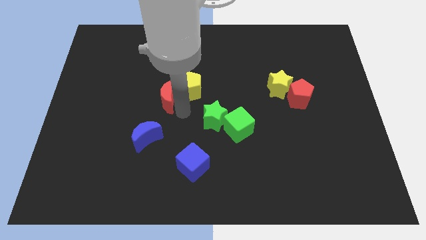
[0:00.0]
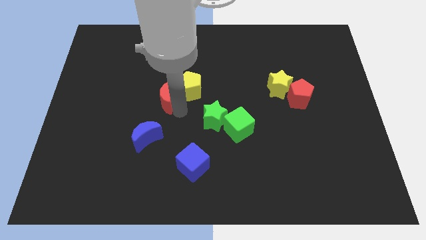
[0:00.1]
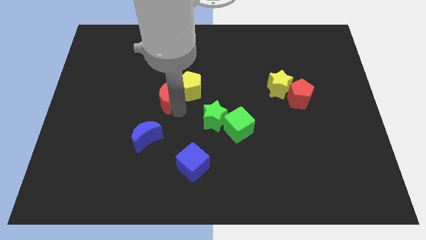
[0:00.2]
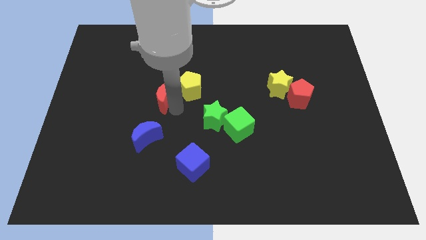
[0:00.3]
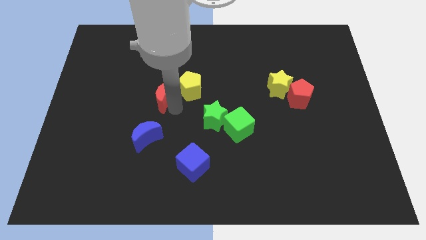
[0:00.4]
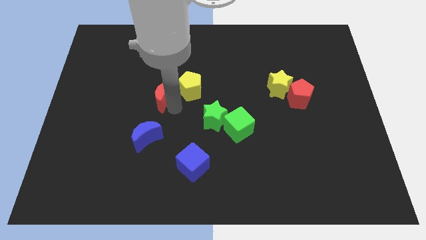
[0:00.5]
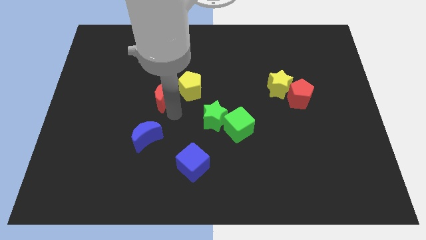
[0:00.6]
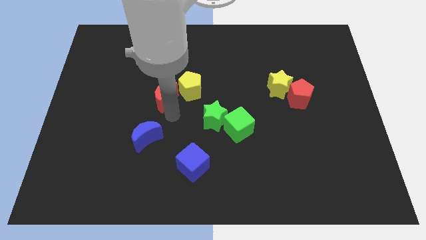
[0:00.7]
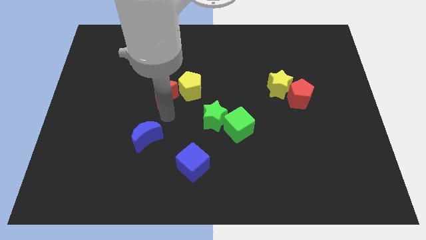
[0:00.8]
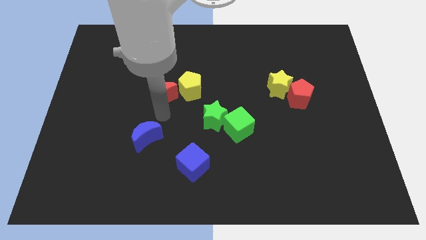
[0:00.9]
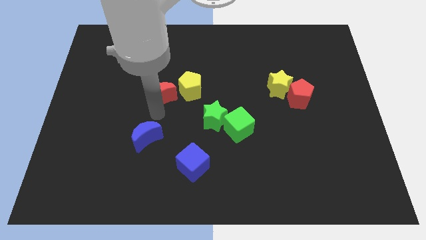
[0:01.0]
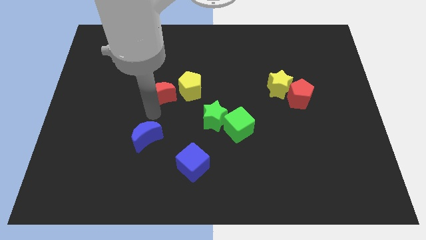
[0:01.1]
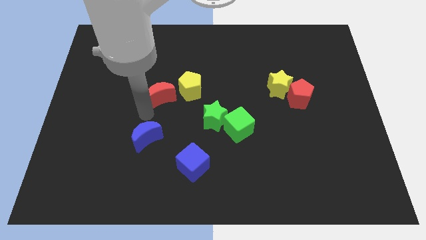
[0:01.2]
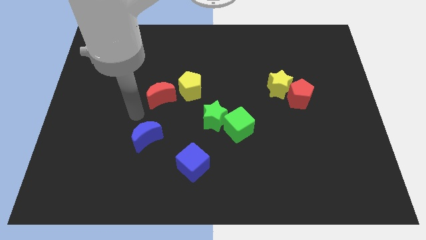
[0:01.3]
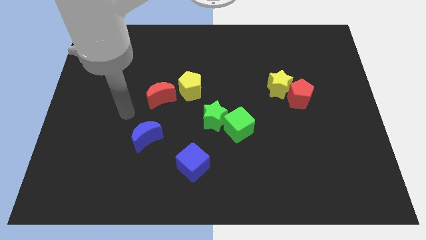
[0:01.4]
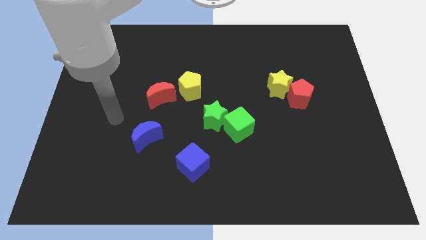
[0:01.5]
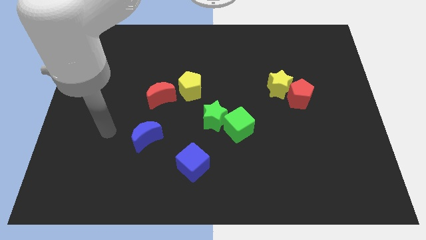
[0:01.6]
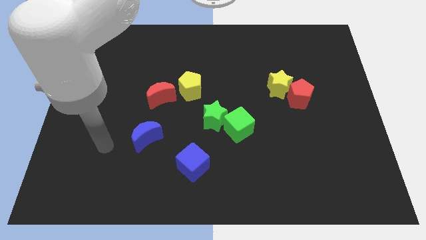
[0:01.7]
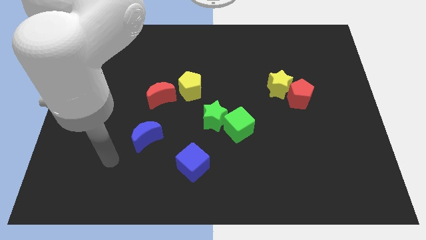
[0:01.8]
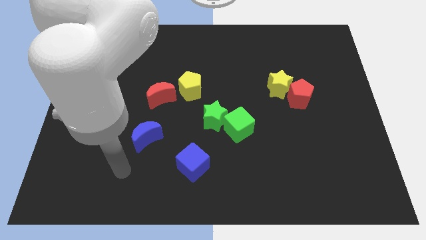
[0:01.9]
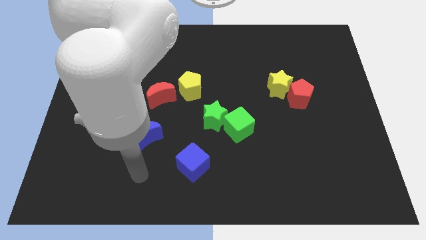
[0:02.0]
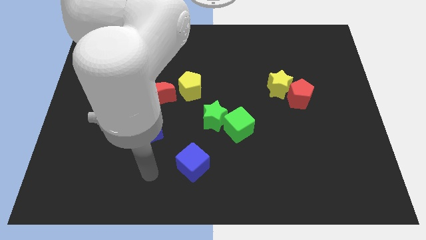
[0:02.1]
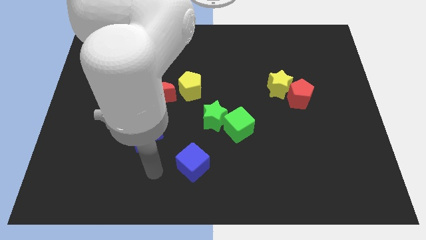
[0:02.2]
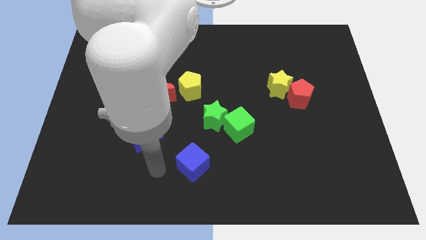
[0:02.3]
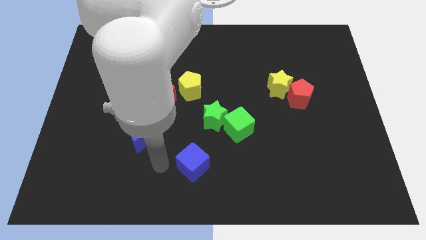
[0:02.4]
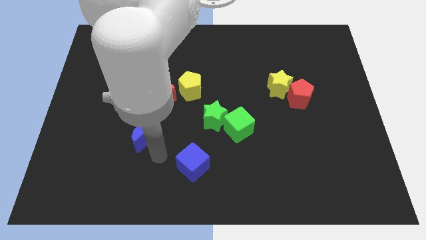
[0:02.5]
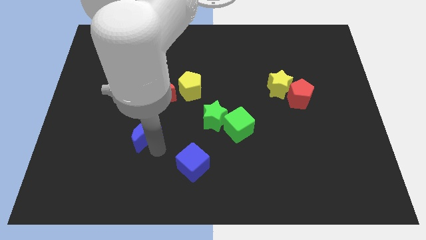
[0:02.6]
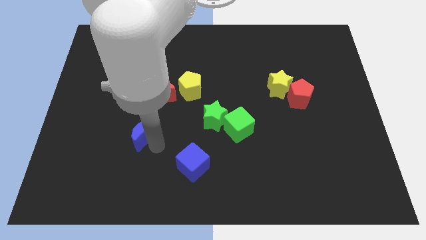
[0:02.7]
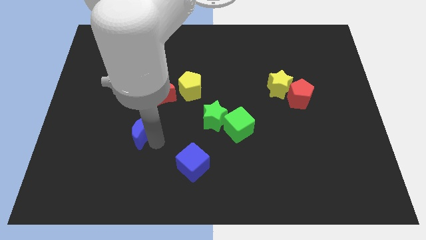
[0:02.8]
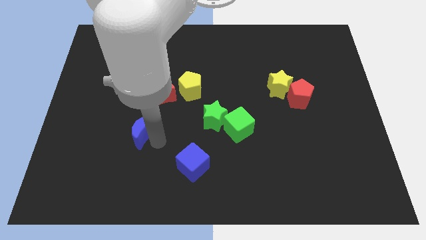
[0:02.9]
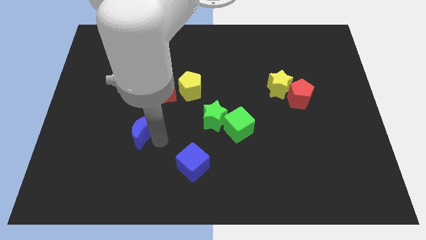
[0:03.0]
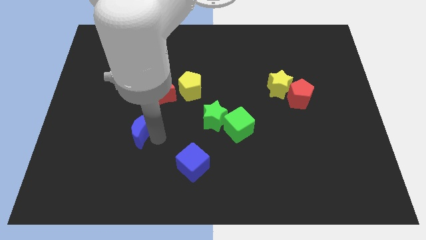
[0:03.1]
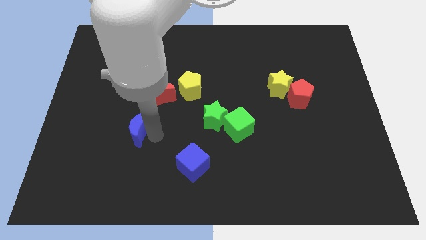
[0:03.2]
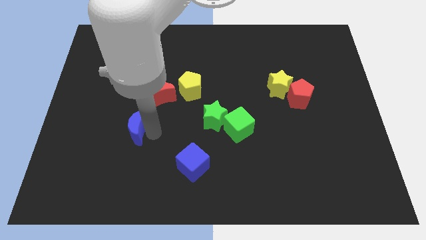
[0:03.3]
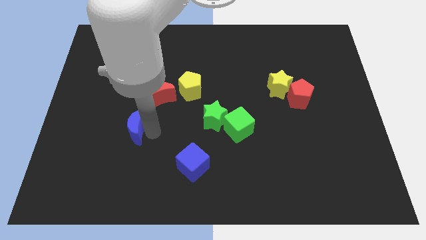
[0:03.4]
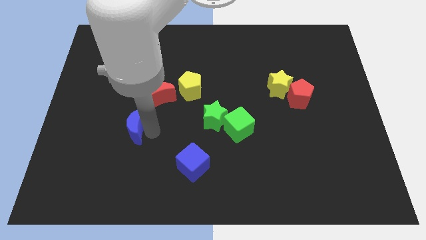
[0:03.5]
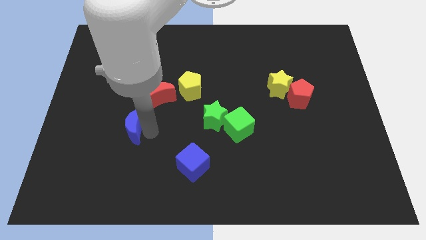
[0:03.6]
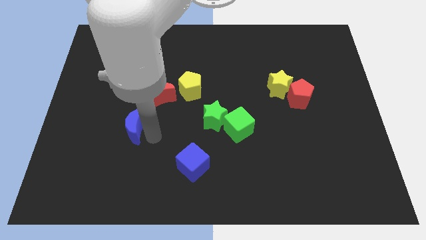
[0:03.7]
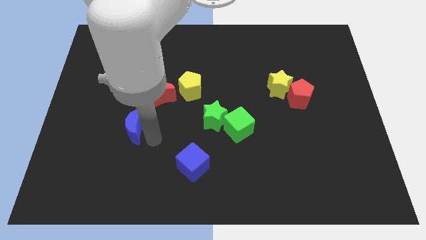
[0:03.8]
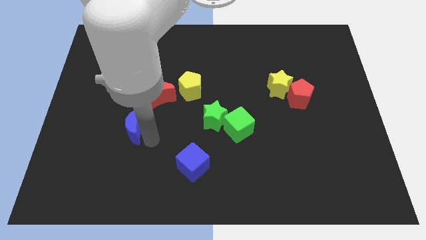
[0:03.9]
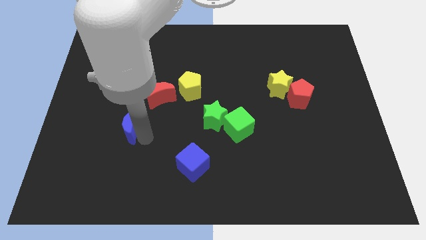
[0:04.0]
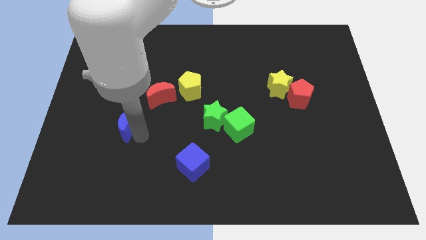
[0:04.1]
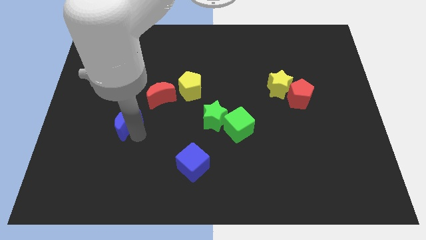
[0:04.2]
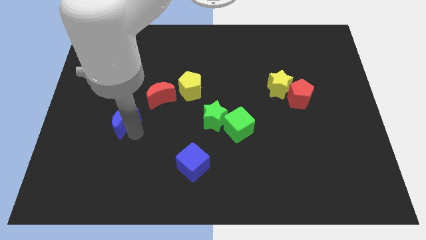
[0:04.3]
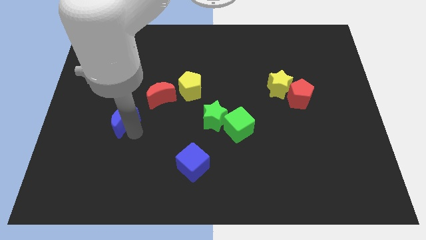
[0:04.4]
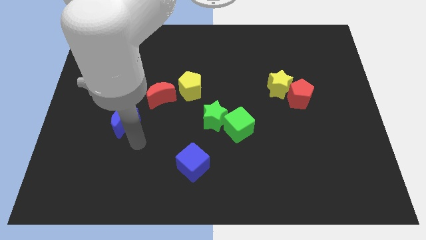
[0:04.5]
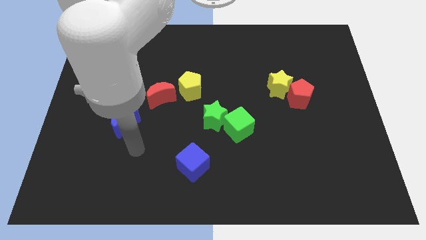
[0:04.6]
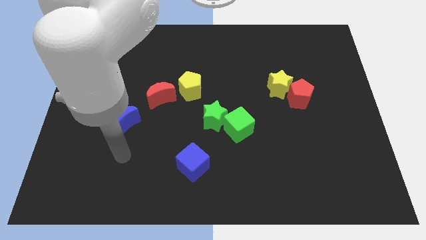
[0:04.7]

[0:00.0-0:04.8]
place both the crescents to the bottom left side of the yellow pentagon

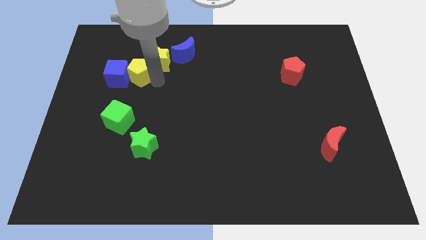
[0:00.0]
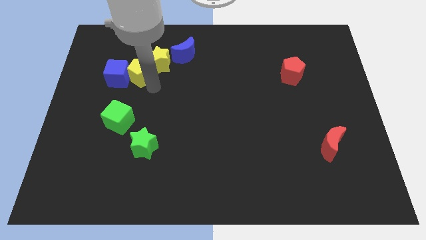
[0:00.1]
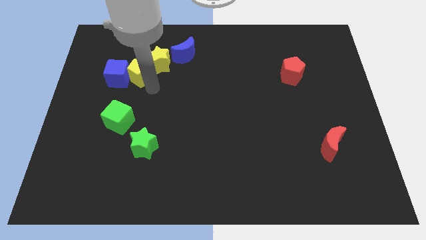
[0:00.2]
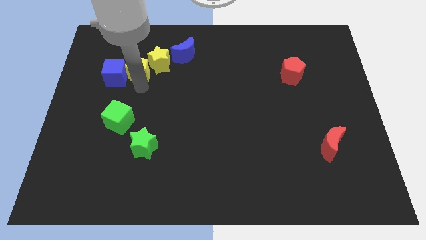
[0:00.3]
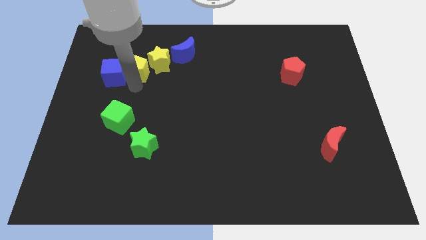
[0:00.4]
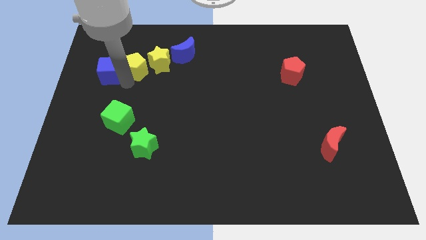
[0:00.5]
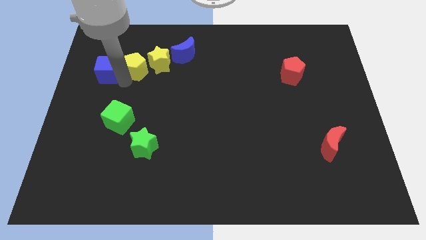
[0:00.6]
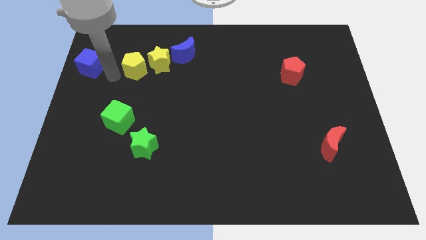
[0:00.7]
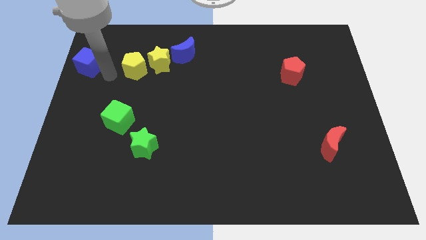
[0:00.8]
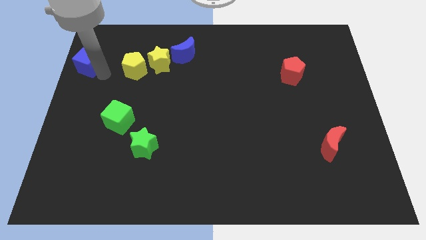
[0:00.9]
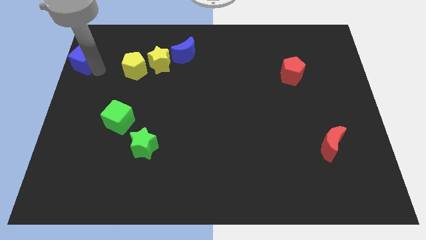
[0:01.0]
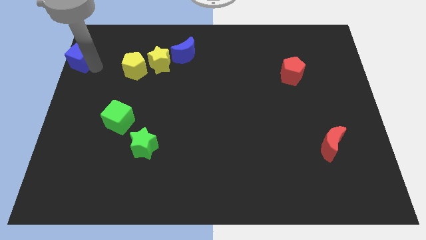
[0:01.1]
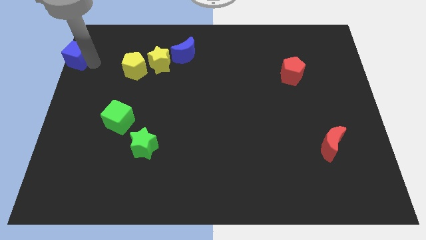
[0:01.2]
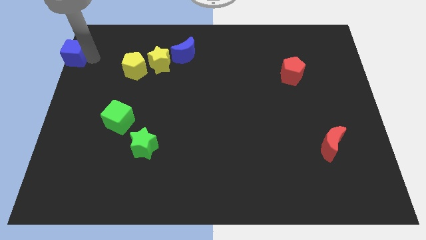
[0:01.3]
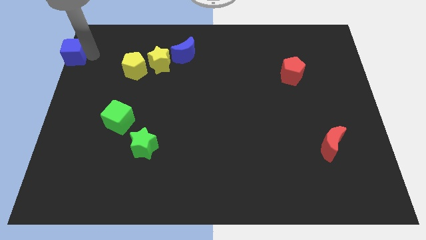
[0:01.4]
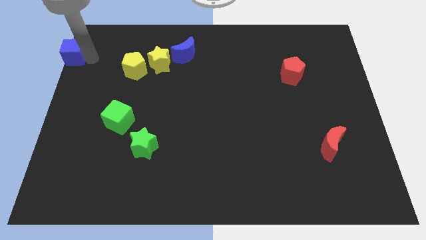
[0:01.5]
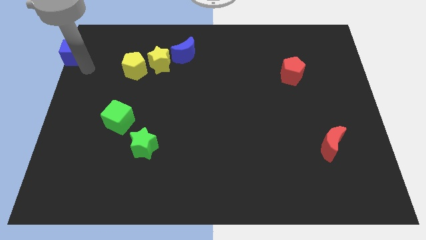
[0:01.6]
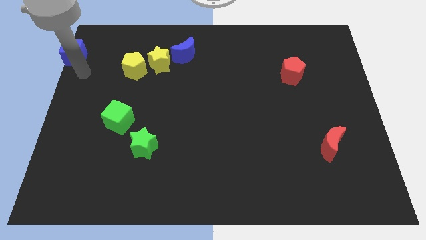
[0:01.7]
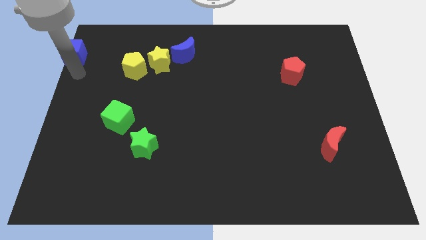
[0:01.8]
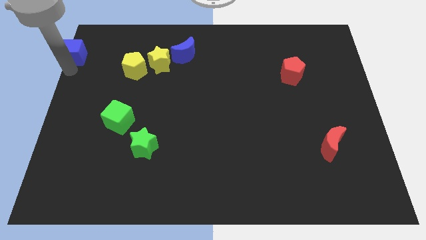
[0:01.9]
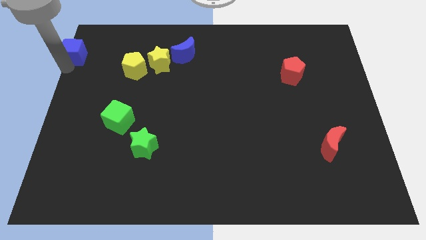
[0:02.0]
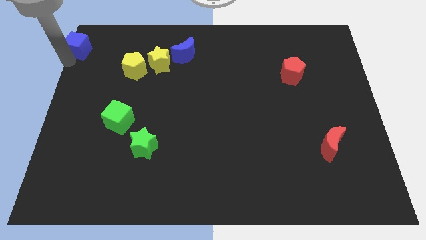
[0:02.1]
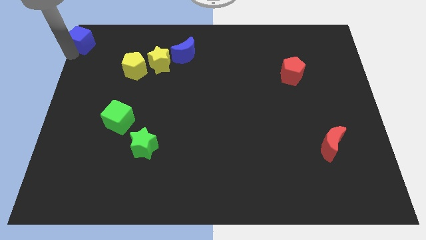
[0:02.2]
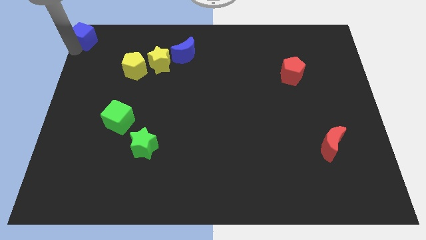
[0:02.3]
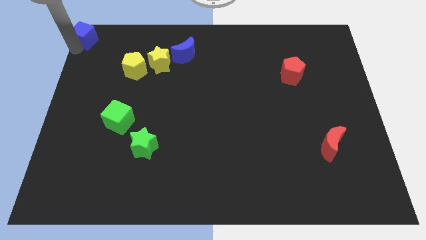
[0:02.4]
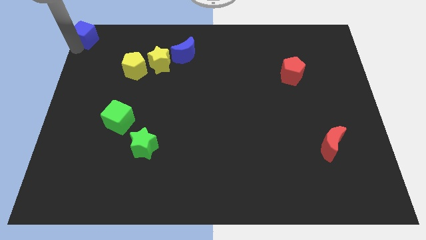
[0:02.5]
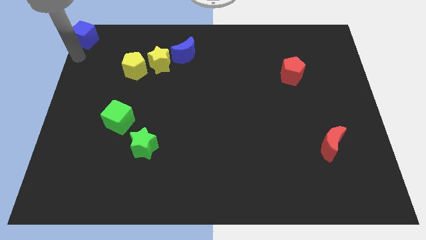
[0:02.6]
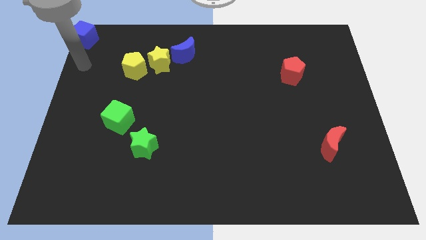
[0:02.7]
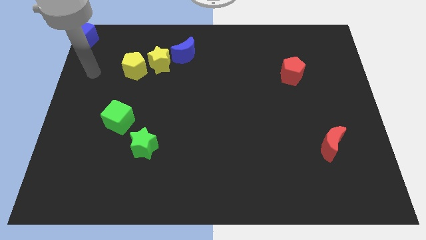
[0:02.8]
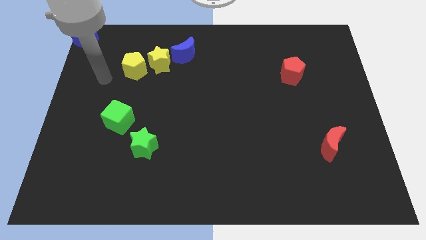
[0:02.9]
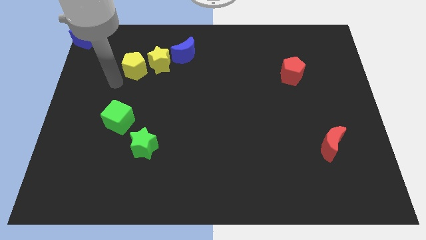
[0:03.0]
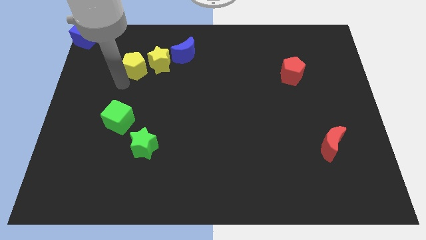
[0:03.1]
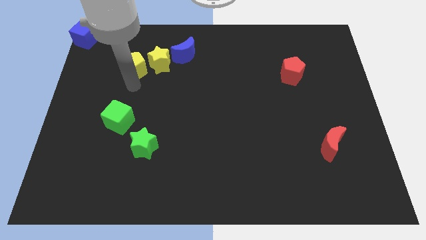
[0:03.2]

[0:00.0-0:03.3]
move the blue cube to the top left corner of the board

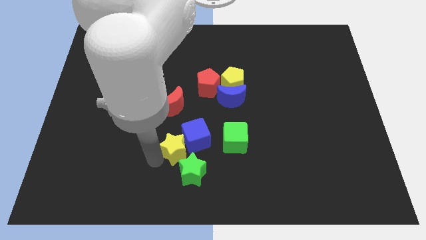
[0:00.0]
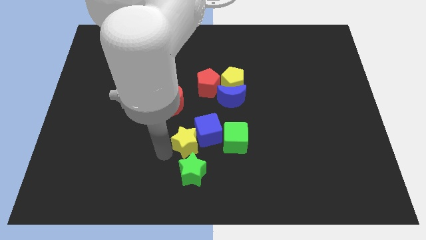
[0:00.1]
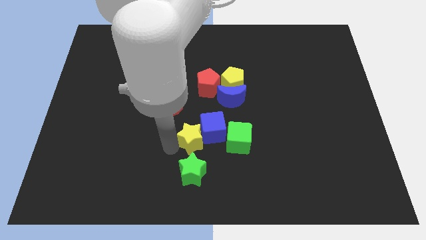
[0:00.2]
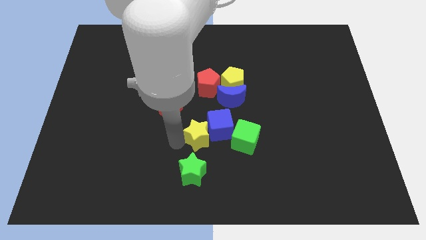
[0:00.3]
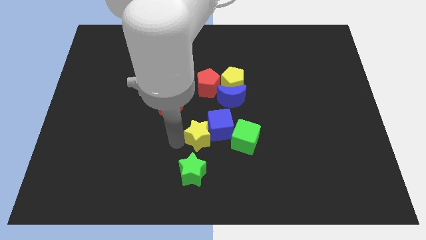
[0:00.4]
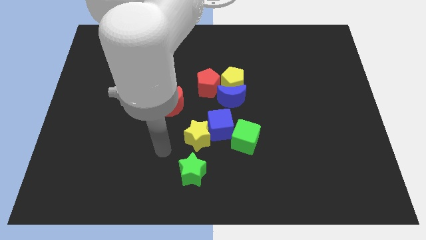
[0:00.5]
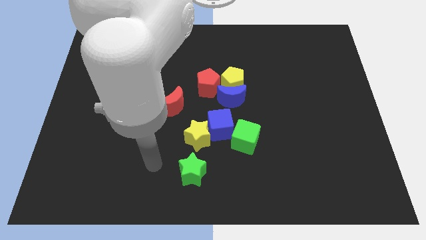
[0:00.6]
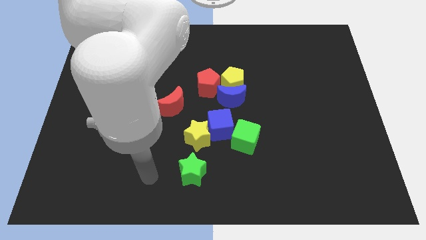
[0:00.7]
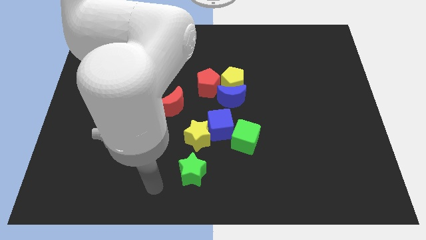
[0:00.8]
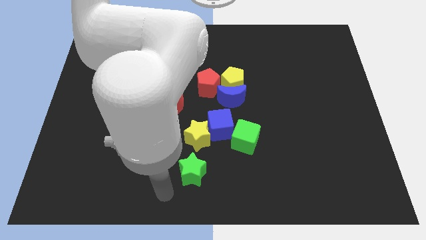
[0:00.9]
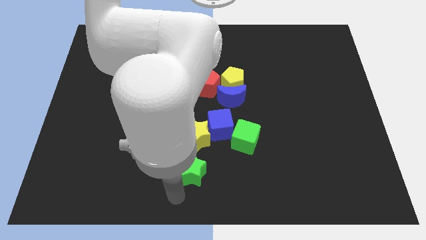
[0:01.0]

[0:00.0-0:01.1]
slide yellow star on top of green star
